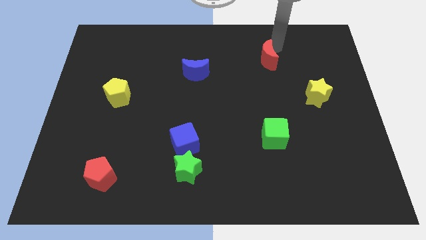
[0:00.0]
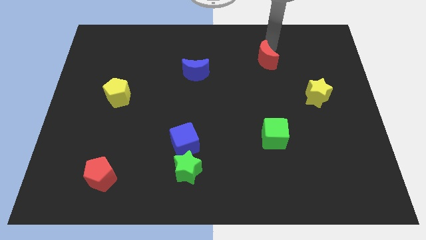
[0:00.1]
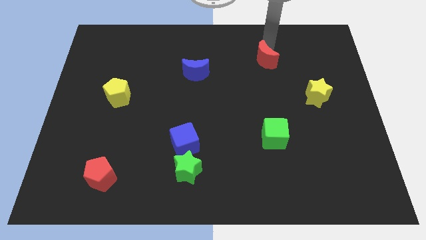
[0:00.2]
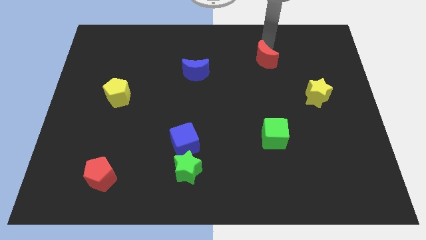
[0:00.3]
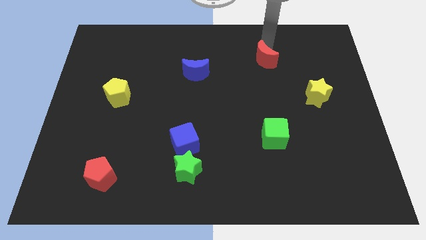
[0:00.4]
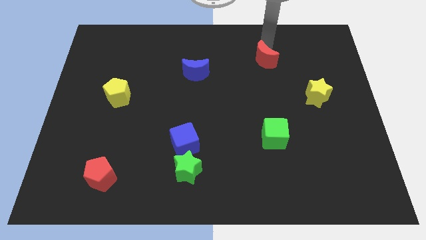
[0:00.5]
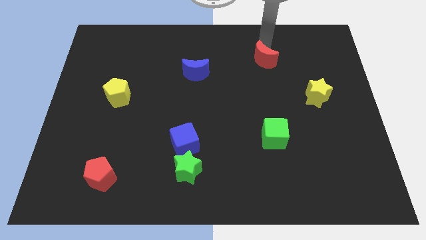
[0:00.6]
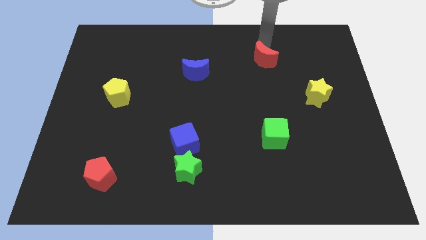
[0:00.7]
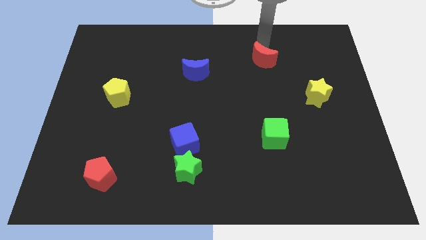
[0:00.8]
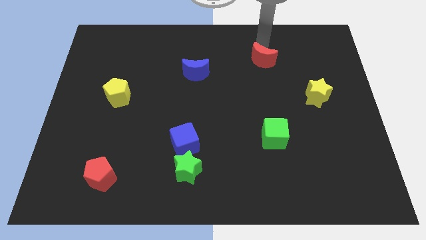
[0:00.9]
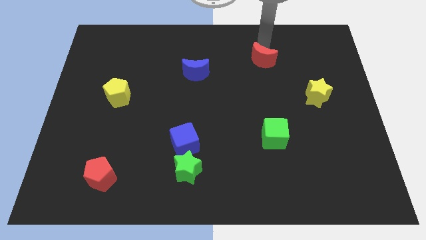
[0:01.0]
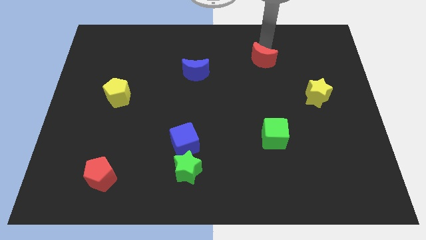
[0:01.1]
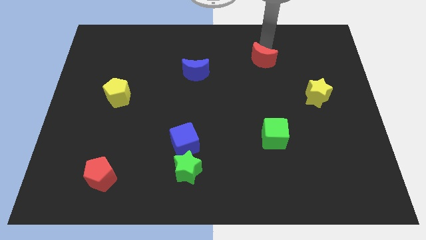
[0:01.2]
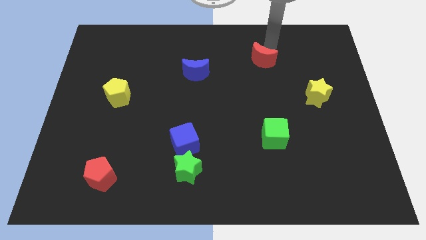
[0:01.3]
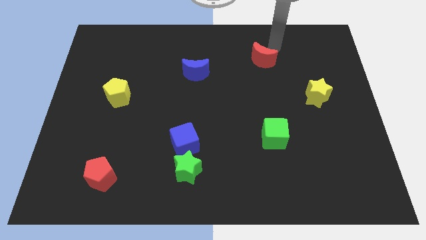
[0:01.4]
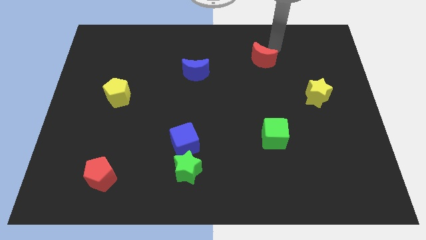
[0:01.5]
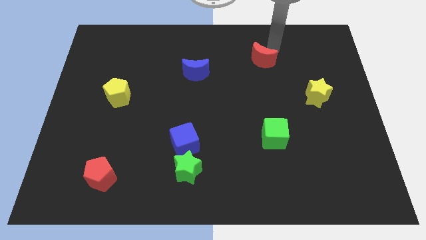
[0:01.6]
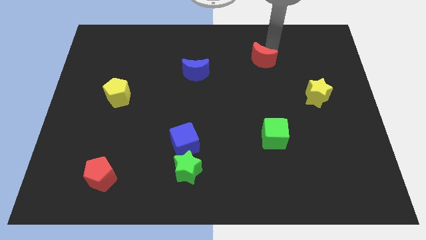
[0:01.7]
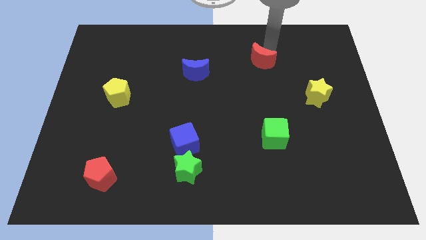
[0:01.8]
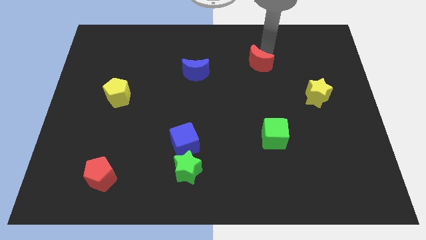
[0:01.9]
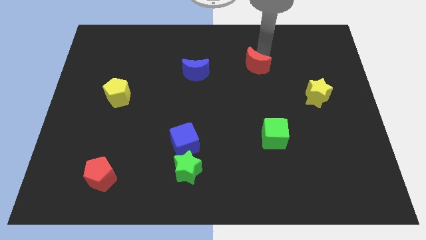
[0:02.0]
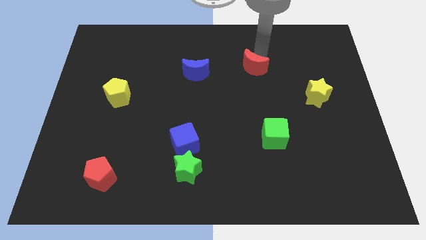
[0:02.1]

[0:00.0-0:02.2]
move the red moon slightly down to the board

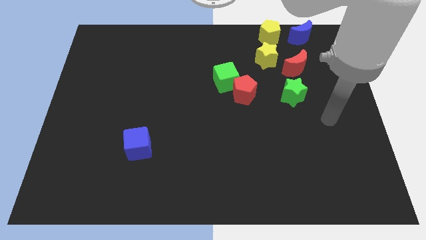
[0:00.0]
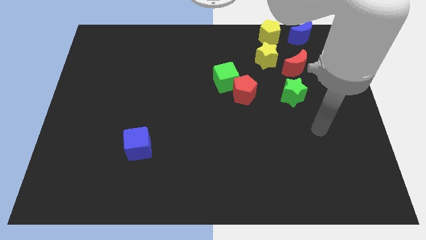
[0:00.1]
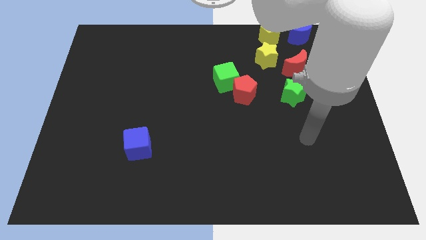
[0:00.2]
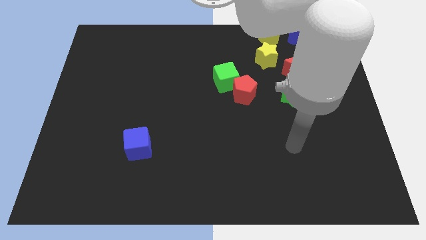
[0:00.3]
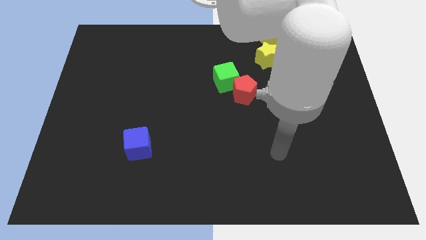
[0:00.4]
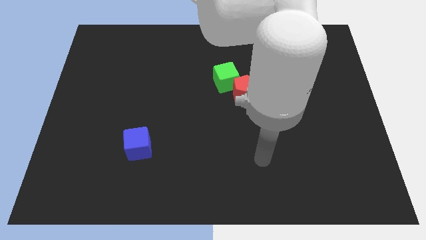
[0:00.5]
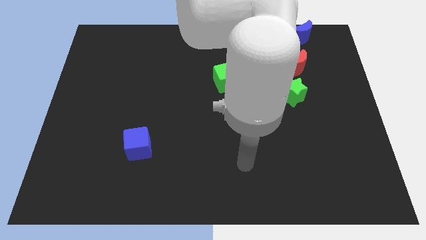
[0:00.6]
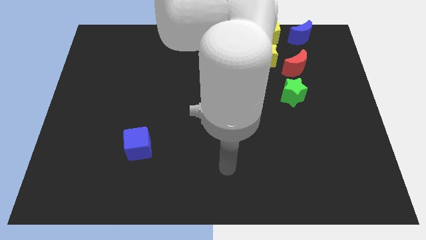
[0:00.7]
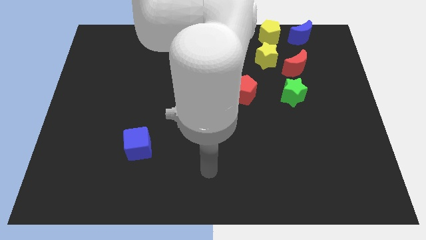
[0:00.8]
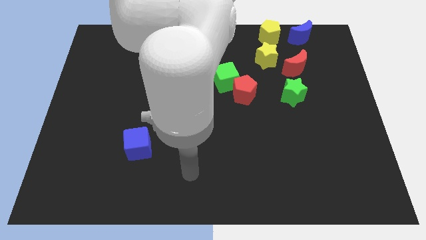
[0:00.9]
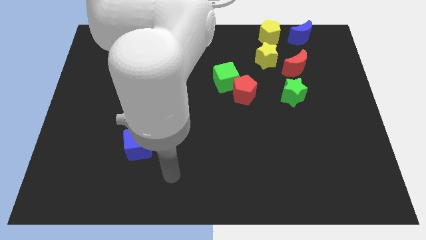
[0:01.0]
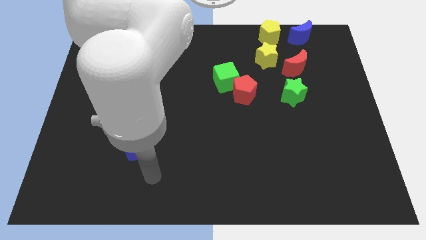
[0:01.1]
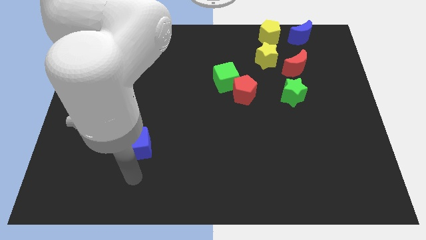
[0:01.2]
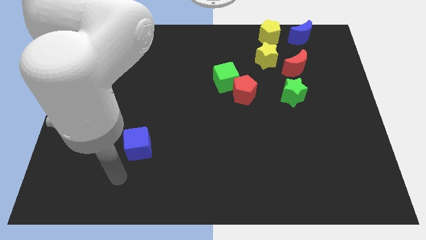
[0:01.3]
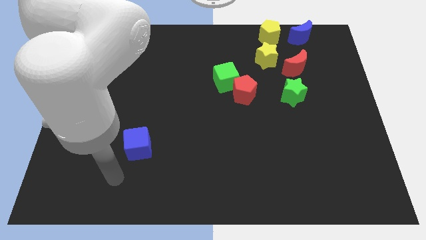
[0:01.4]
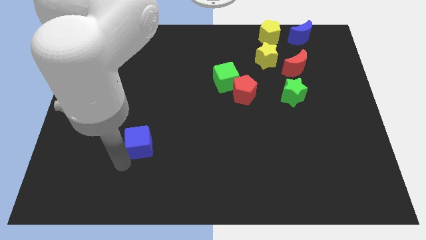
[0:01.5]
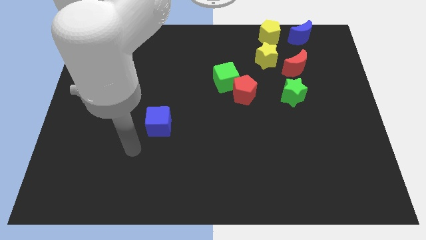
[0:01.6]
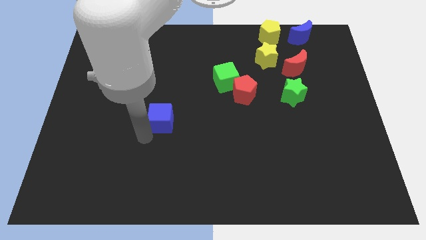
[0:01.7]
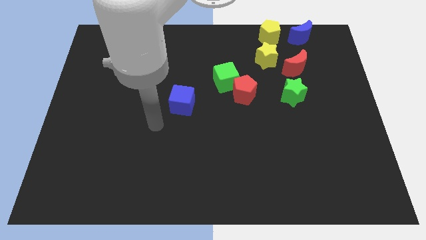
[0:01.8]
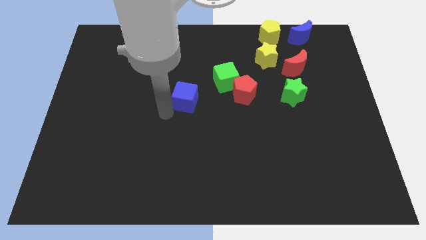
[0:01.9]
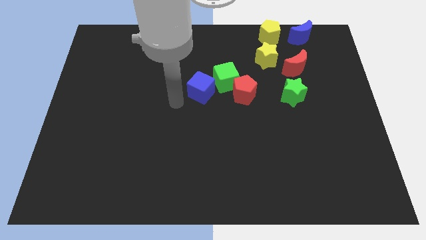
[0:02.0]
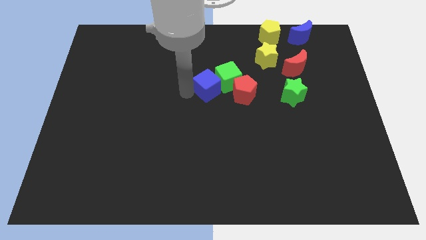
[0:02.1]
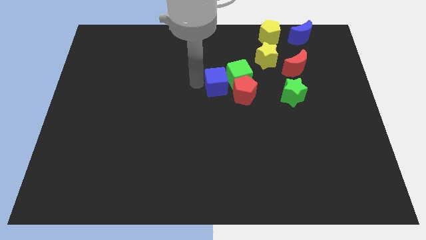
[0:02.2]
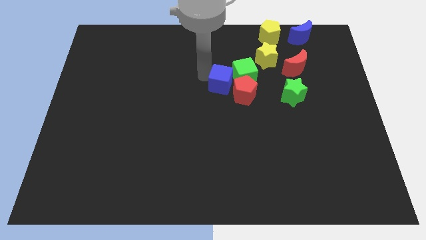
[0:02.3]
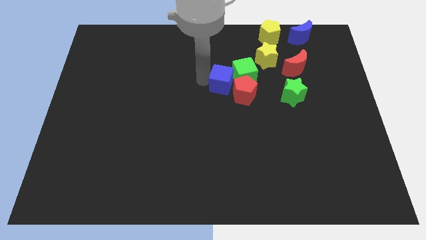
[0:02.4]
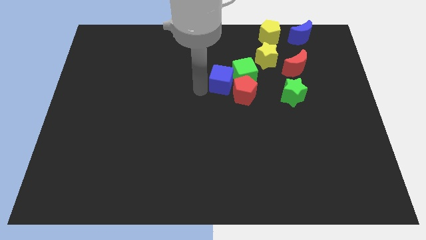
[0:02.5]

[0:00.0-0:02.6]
push the blue cube into the green cube

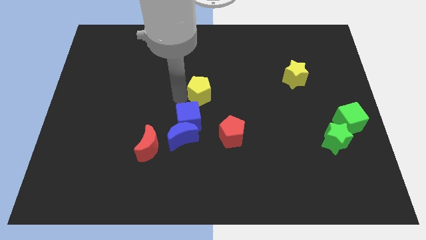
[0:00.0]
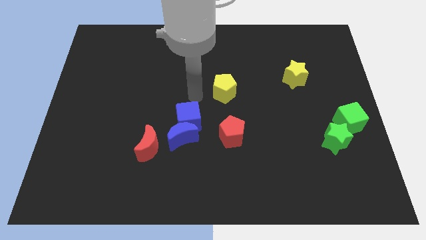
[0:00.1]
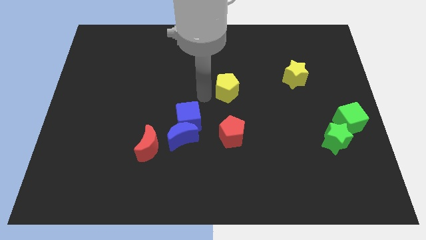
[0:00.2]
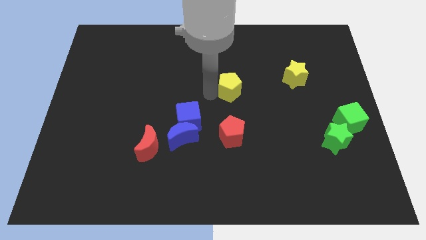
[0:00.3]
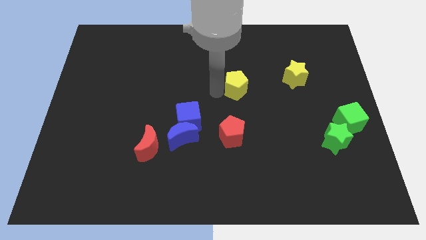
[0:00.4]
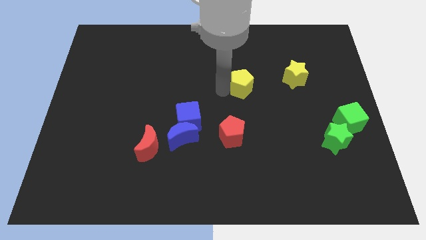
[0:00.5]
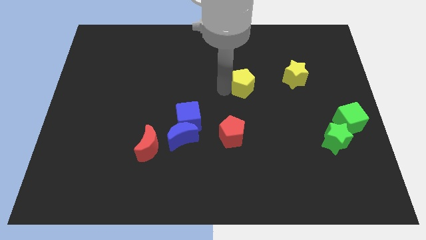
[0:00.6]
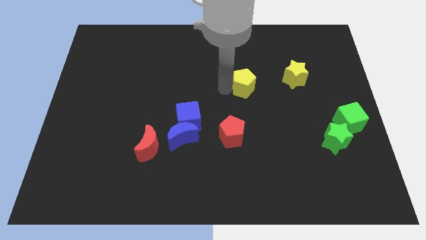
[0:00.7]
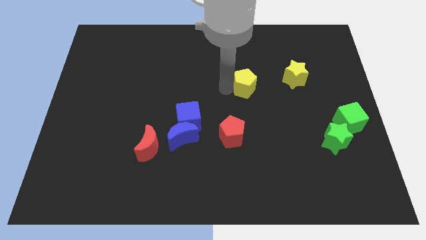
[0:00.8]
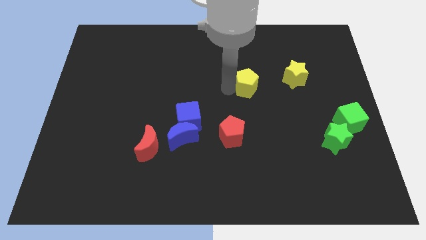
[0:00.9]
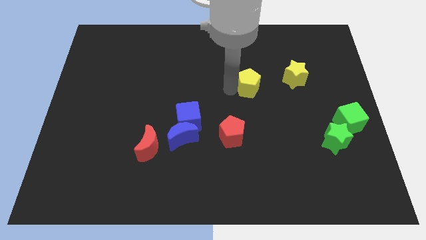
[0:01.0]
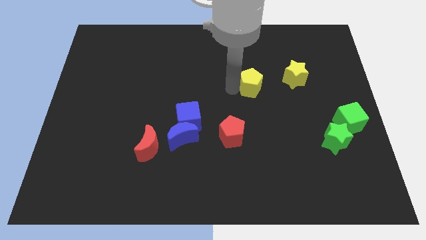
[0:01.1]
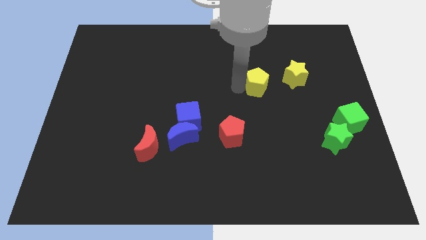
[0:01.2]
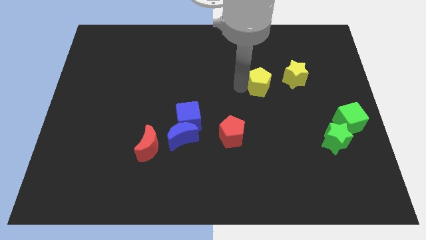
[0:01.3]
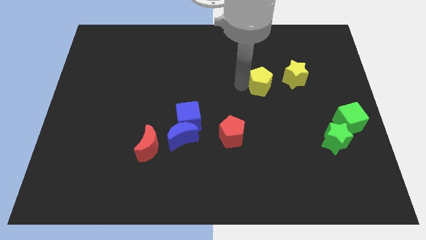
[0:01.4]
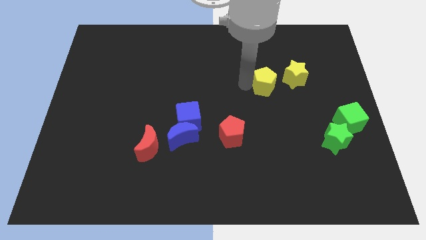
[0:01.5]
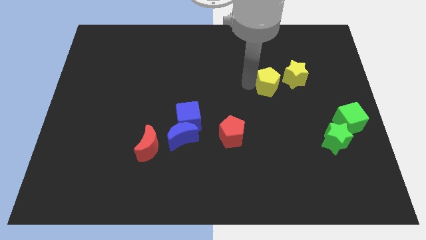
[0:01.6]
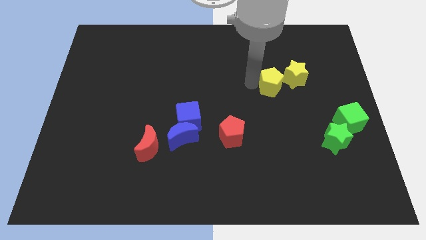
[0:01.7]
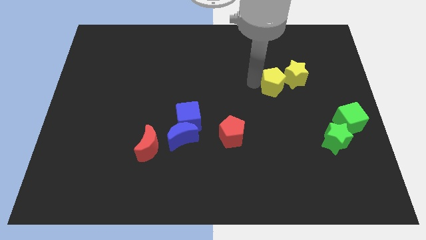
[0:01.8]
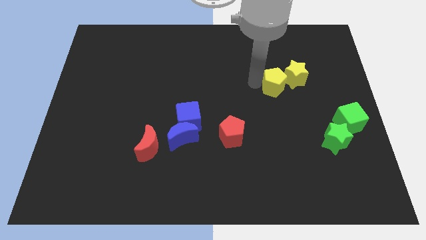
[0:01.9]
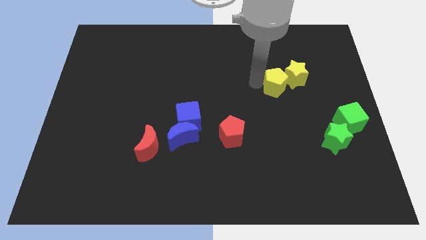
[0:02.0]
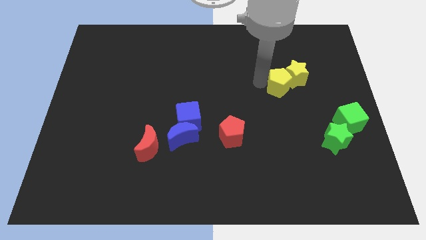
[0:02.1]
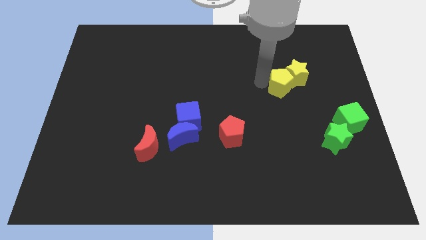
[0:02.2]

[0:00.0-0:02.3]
push the yellow pentagon into the yellow star

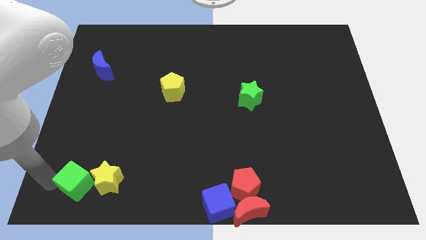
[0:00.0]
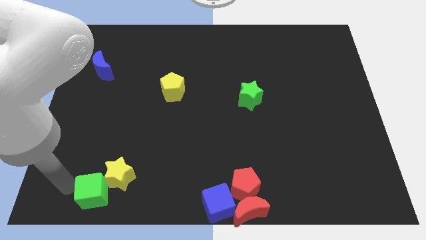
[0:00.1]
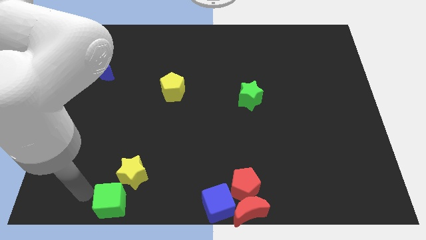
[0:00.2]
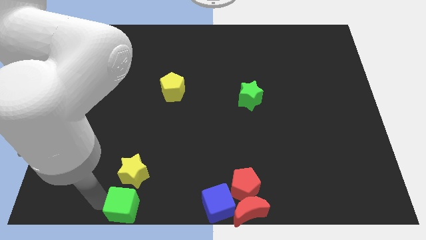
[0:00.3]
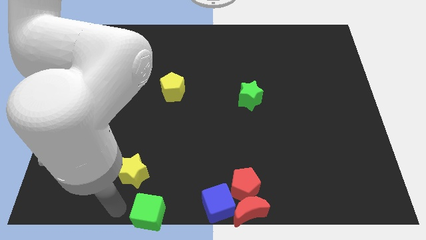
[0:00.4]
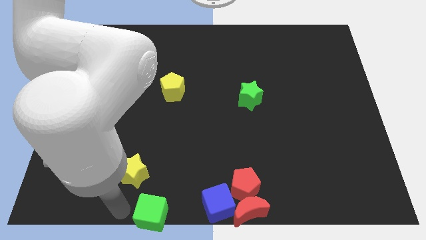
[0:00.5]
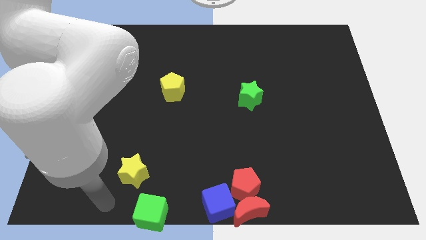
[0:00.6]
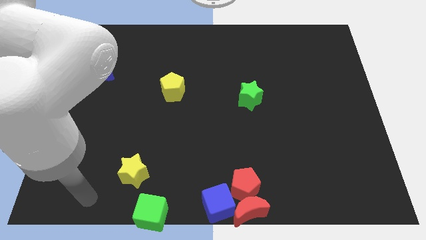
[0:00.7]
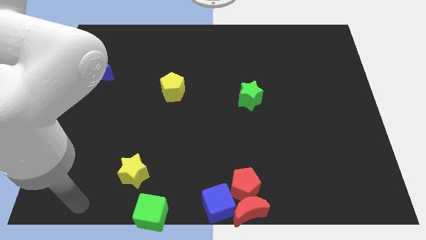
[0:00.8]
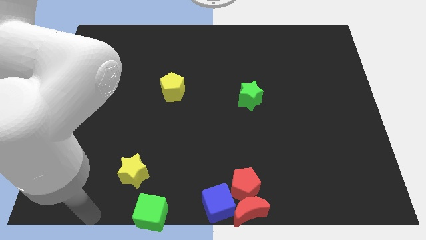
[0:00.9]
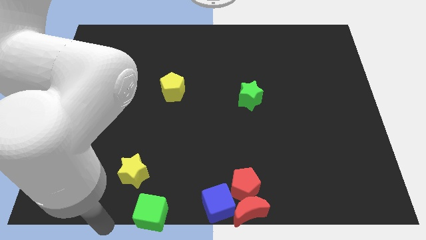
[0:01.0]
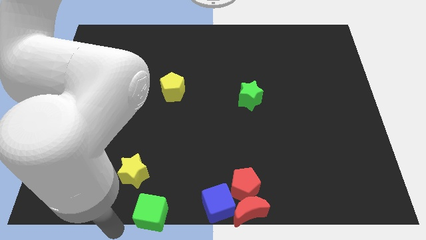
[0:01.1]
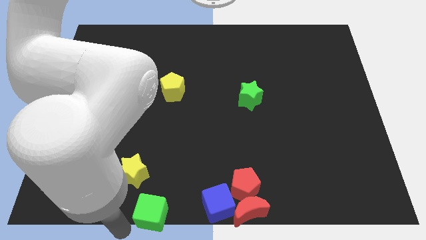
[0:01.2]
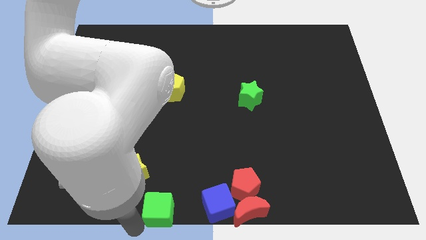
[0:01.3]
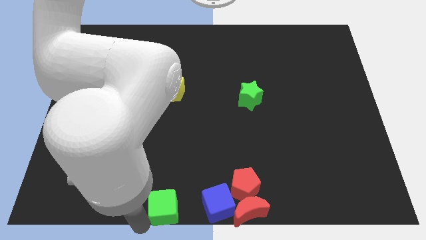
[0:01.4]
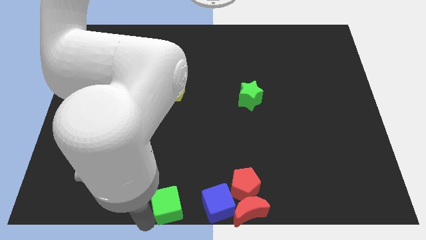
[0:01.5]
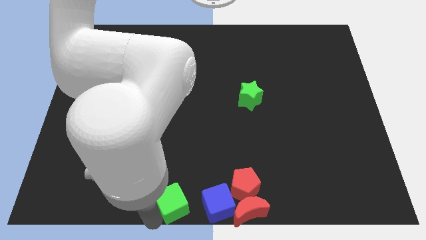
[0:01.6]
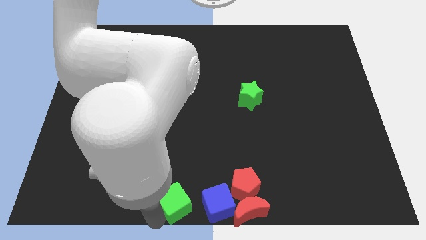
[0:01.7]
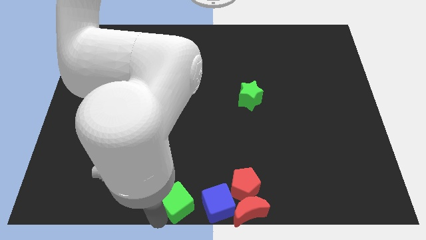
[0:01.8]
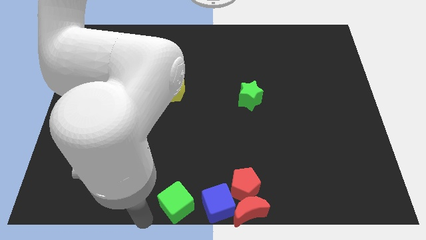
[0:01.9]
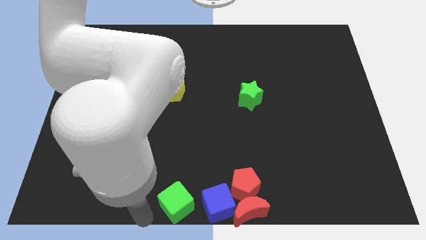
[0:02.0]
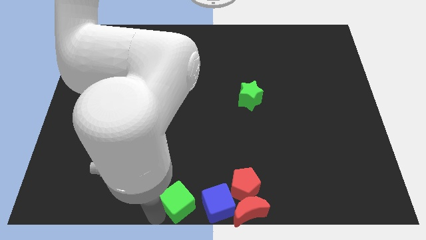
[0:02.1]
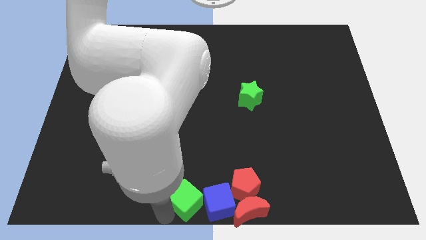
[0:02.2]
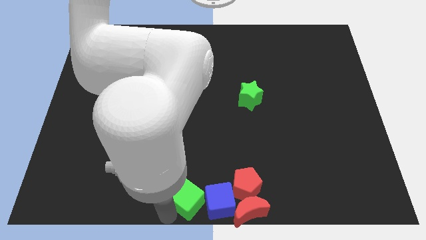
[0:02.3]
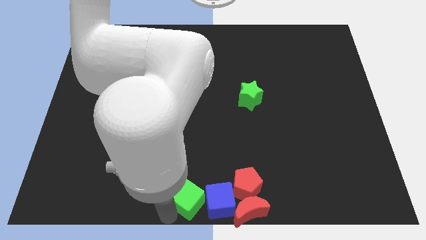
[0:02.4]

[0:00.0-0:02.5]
place green cube beside blue cube
